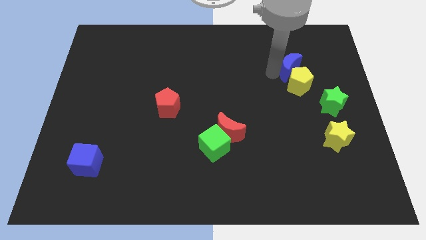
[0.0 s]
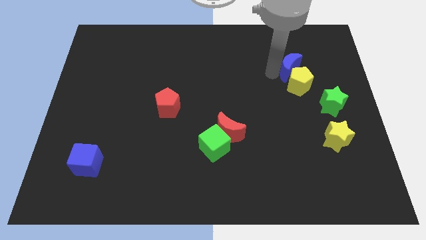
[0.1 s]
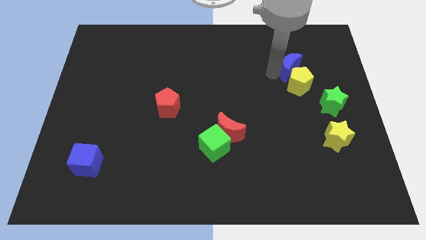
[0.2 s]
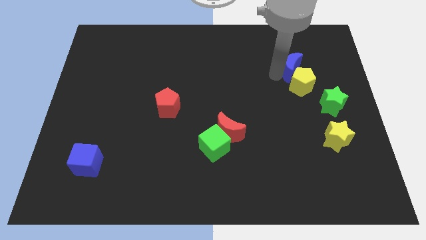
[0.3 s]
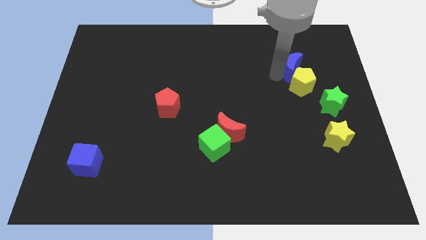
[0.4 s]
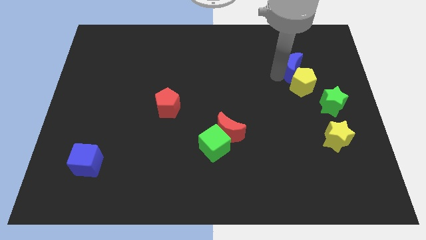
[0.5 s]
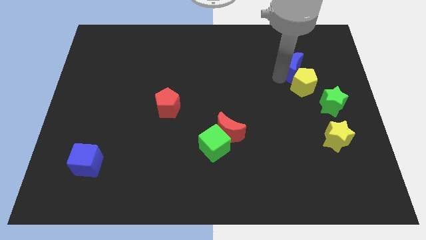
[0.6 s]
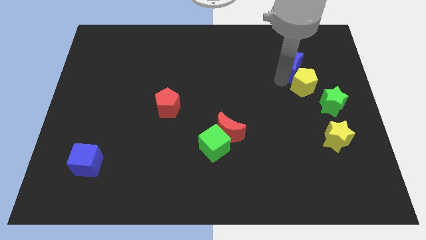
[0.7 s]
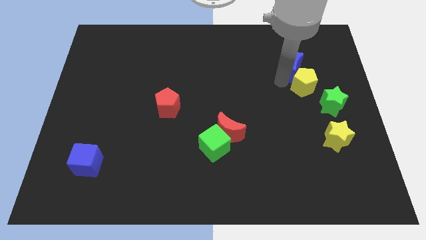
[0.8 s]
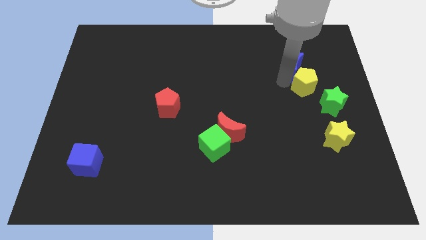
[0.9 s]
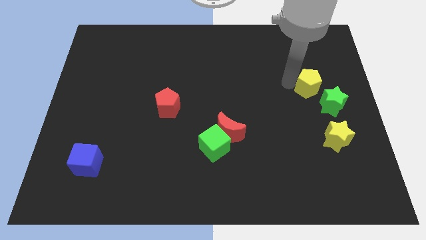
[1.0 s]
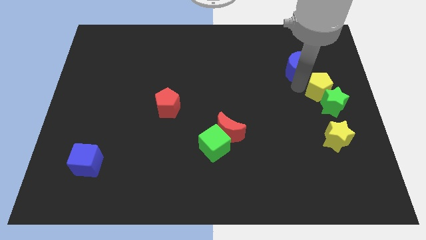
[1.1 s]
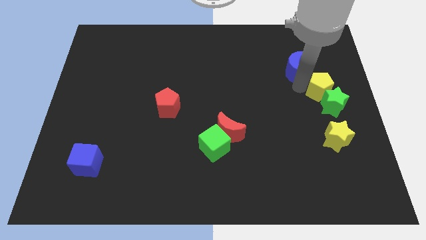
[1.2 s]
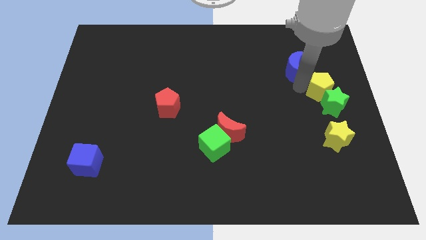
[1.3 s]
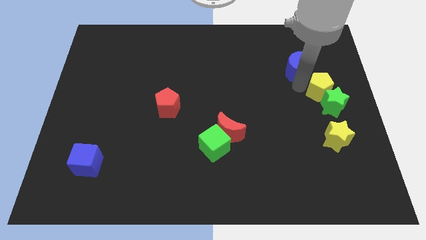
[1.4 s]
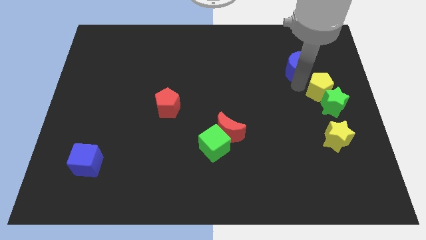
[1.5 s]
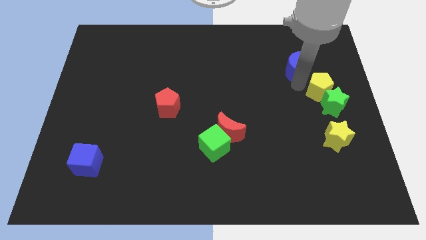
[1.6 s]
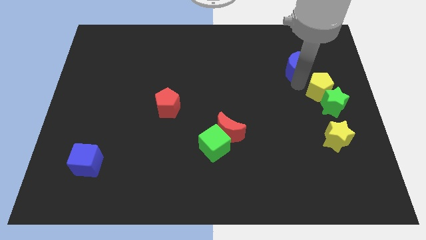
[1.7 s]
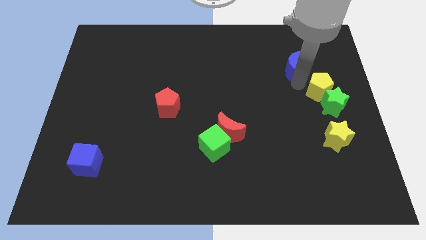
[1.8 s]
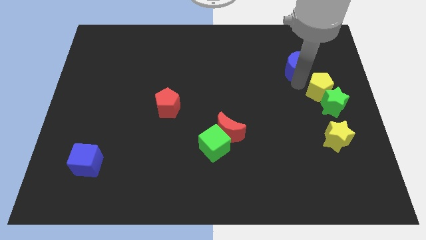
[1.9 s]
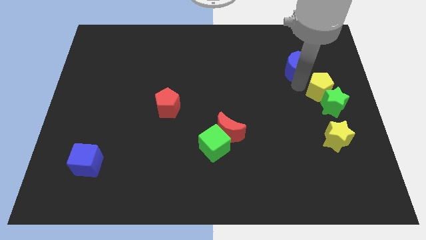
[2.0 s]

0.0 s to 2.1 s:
separate yellow pentagon from the blue moon

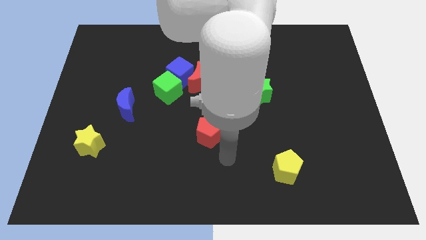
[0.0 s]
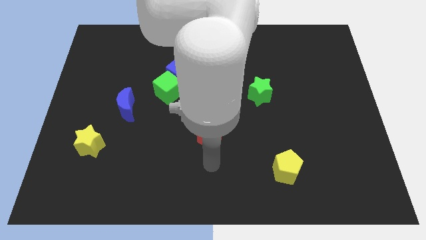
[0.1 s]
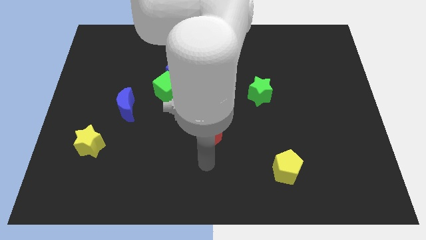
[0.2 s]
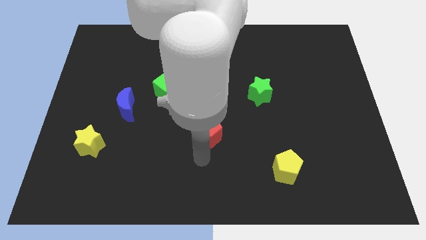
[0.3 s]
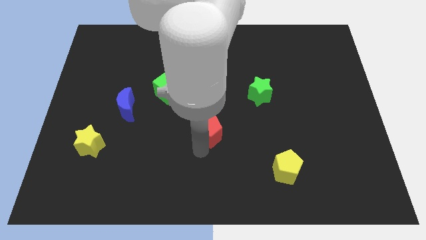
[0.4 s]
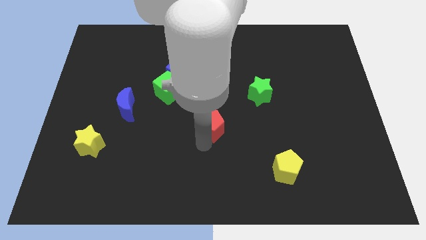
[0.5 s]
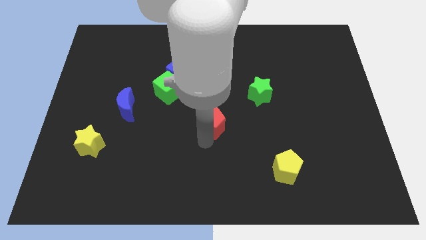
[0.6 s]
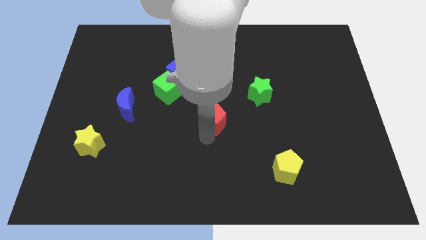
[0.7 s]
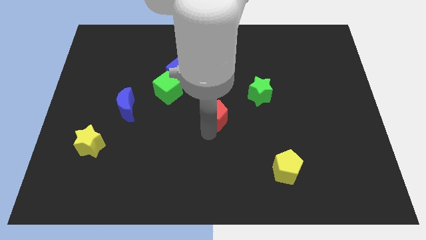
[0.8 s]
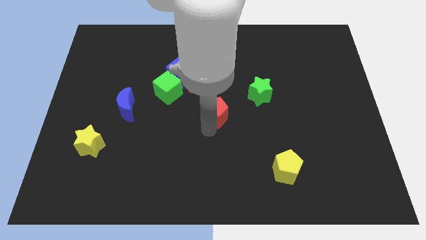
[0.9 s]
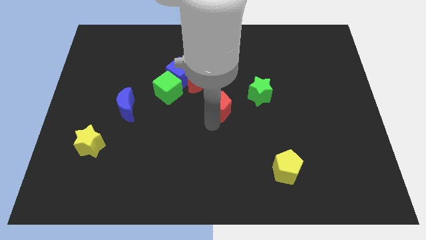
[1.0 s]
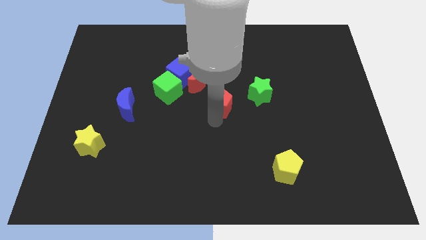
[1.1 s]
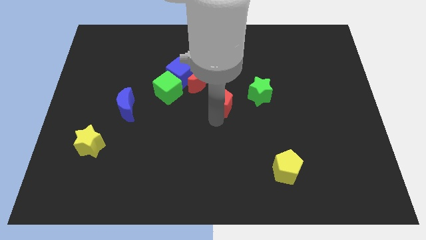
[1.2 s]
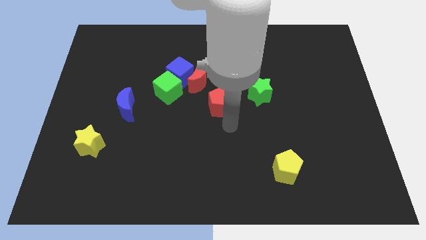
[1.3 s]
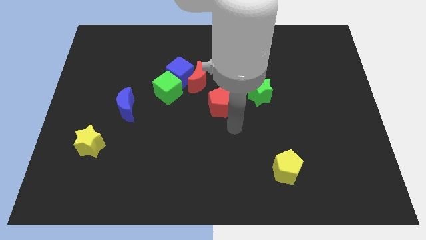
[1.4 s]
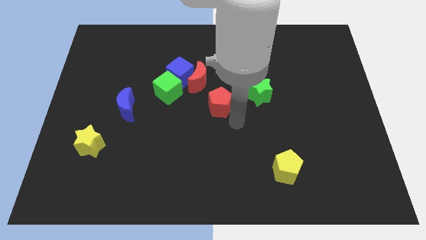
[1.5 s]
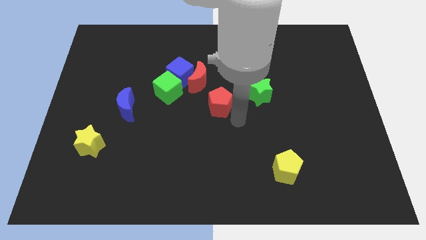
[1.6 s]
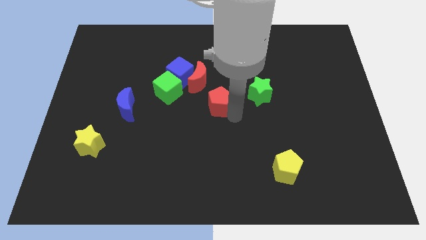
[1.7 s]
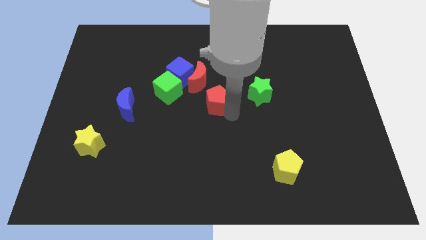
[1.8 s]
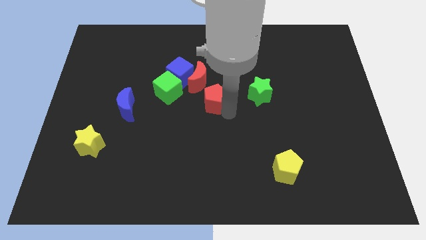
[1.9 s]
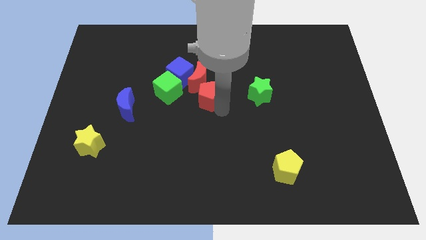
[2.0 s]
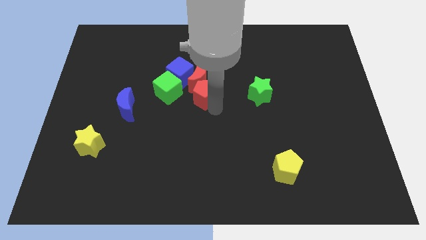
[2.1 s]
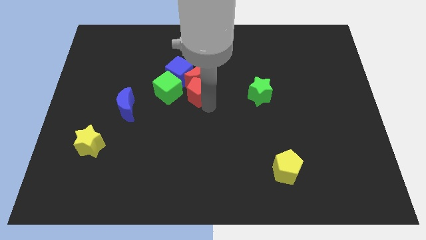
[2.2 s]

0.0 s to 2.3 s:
move the red pentagon to the right of the green cube

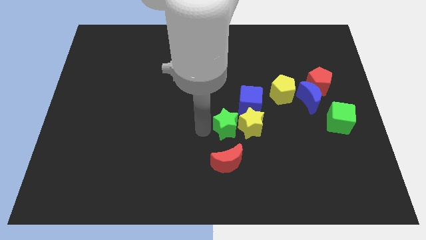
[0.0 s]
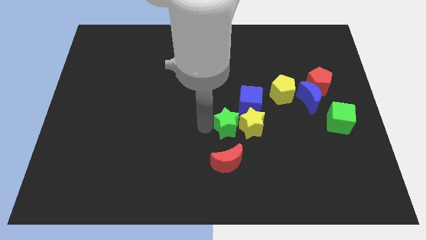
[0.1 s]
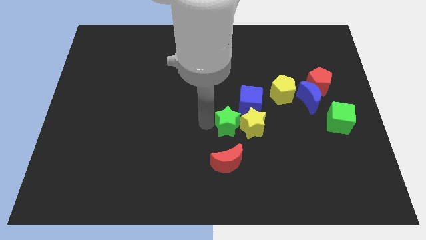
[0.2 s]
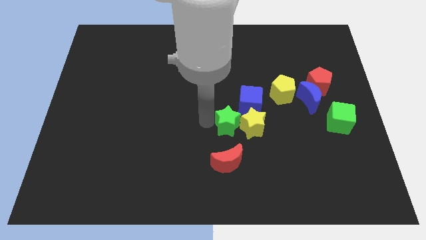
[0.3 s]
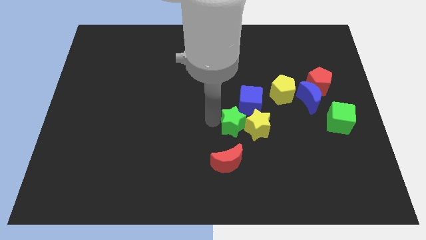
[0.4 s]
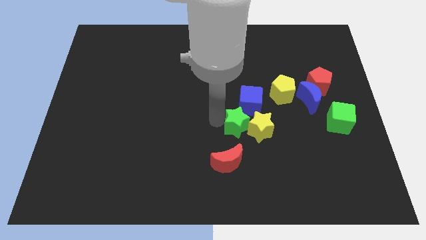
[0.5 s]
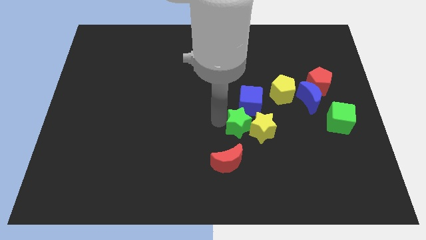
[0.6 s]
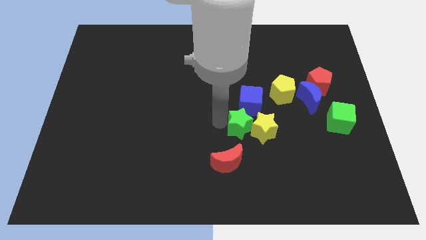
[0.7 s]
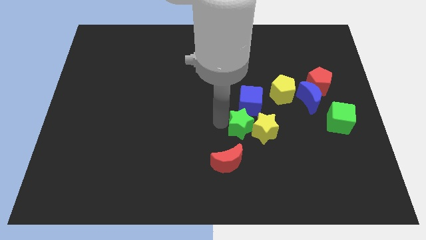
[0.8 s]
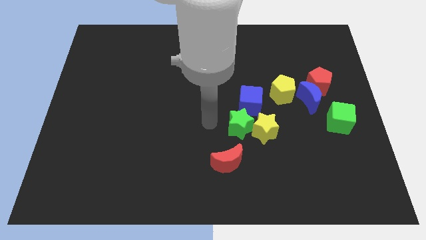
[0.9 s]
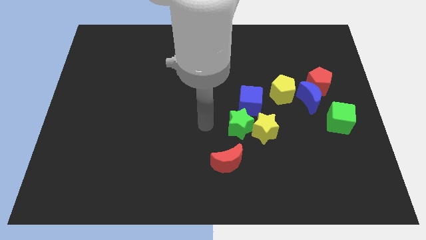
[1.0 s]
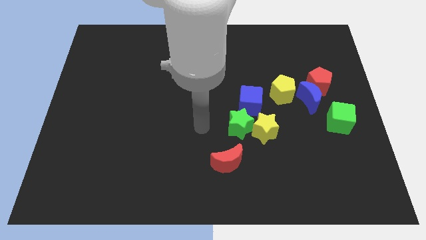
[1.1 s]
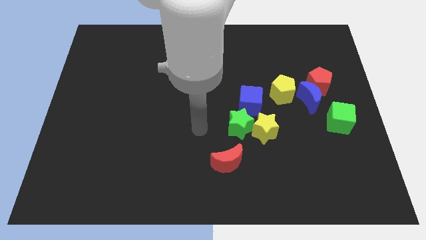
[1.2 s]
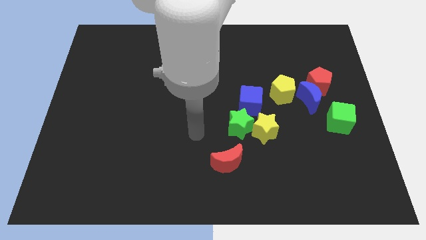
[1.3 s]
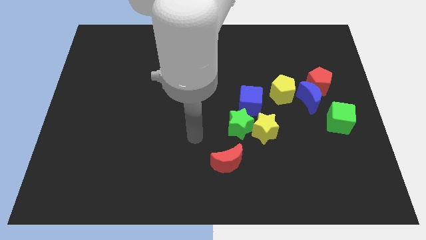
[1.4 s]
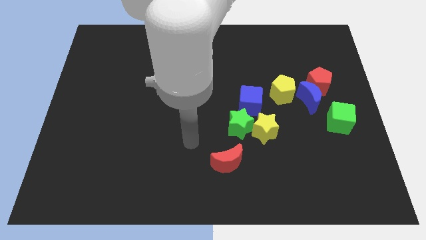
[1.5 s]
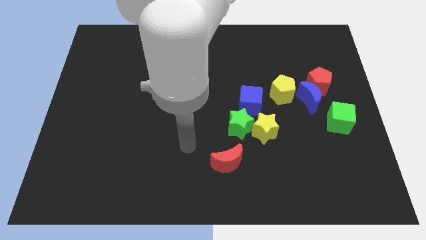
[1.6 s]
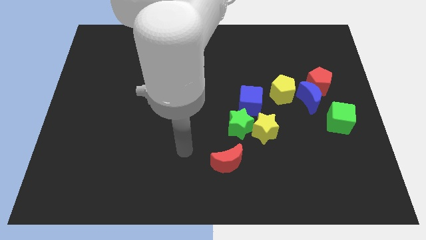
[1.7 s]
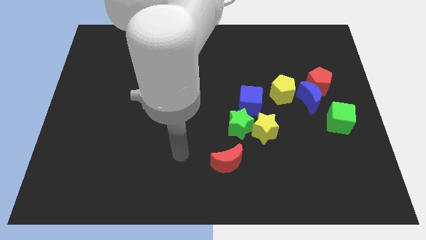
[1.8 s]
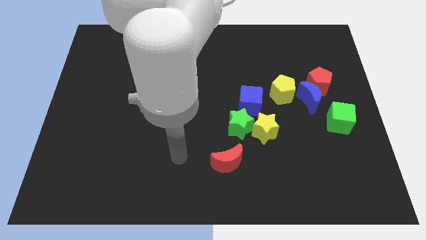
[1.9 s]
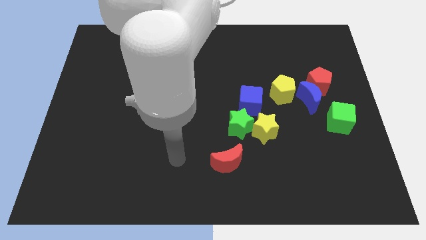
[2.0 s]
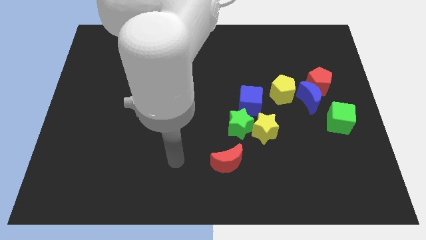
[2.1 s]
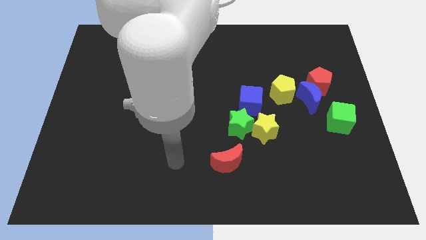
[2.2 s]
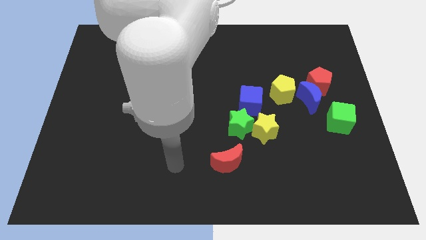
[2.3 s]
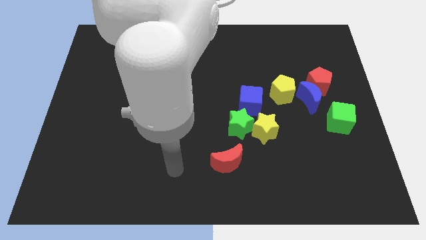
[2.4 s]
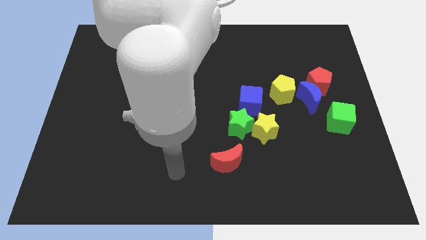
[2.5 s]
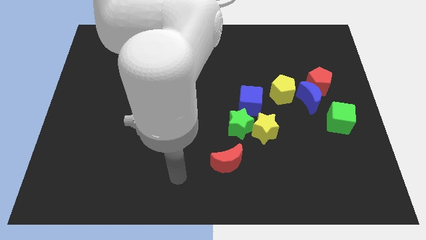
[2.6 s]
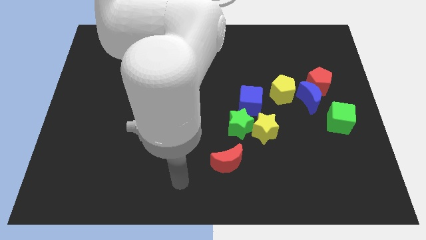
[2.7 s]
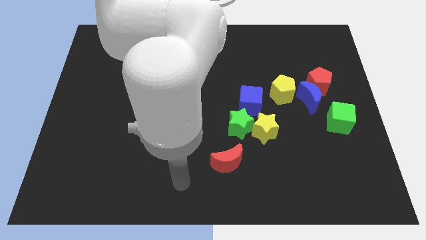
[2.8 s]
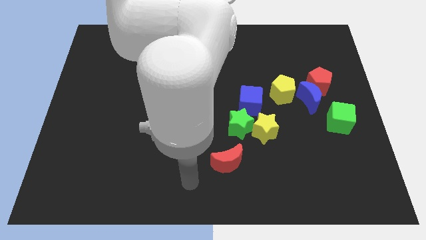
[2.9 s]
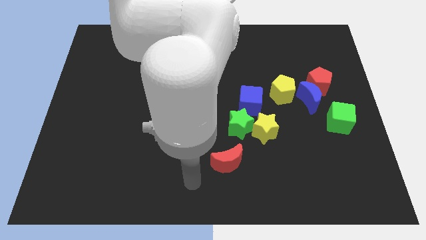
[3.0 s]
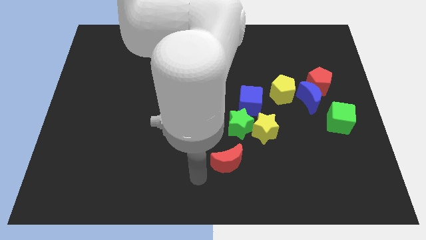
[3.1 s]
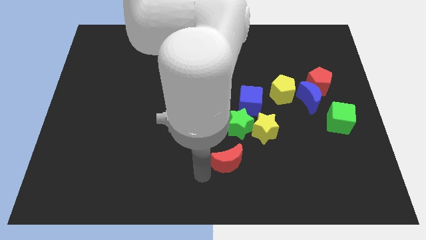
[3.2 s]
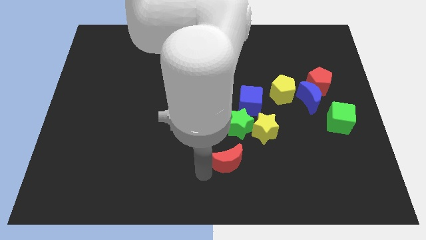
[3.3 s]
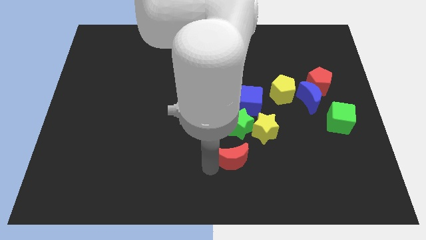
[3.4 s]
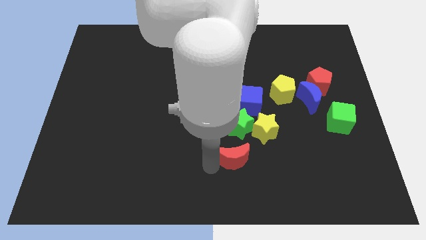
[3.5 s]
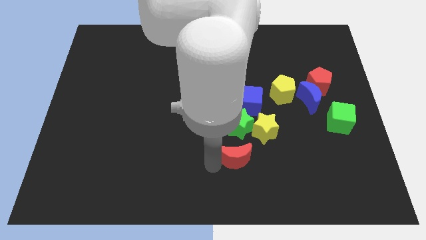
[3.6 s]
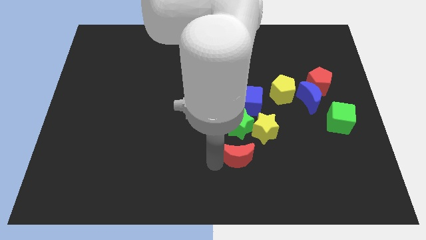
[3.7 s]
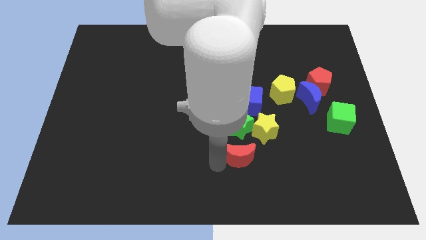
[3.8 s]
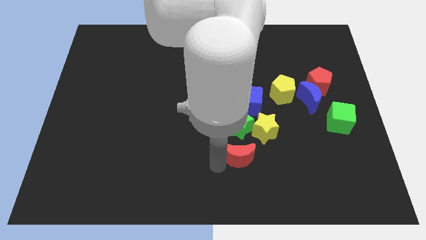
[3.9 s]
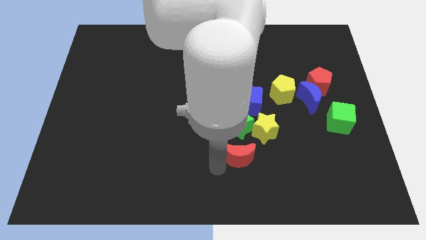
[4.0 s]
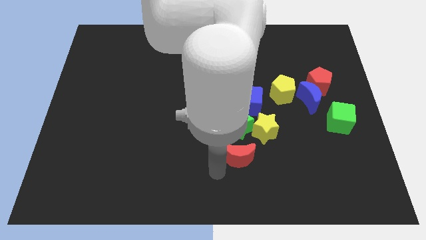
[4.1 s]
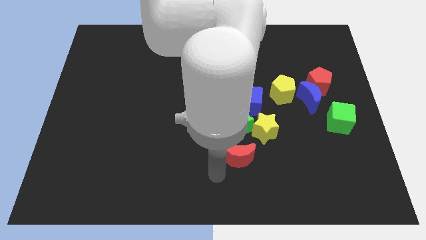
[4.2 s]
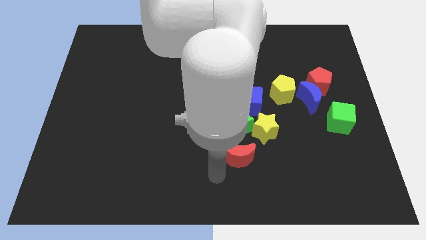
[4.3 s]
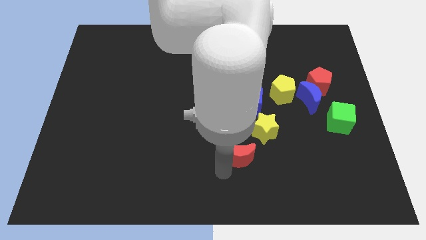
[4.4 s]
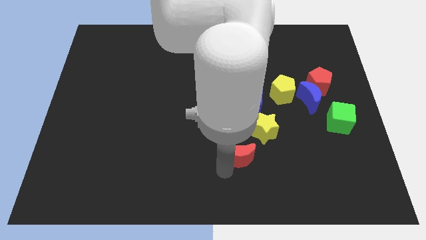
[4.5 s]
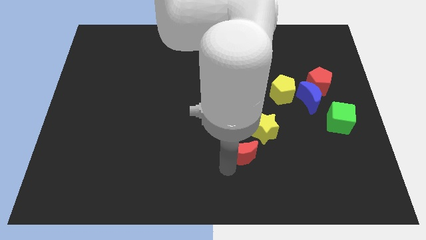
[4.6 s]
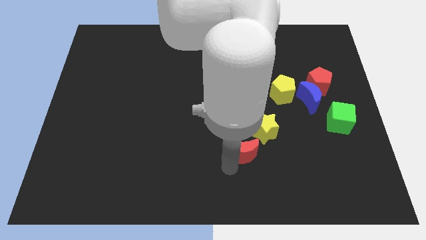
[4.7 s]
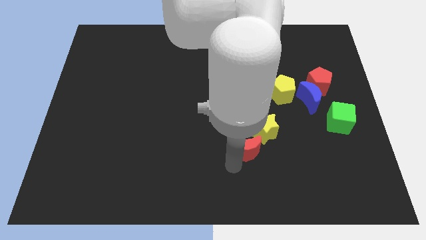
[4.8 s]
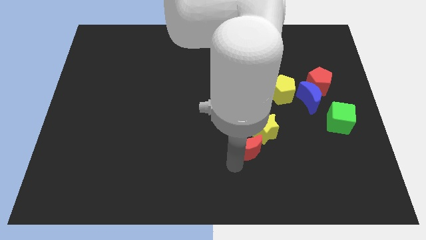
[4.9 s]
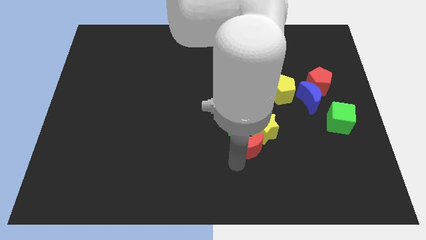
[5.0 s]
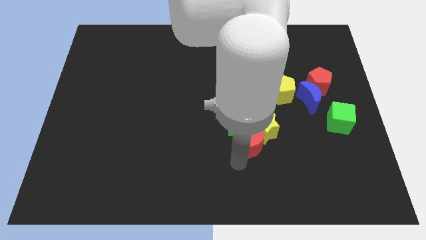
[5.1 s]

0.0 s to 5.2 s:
move the red crescent below the group of stars
